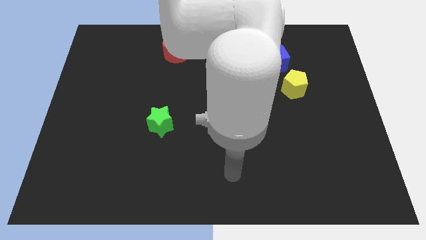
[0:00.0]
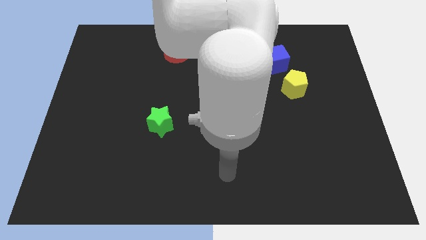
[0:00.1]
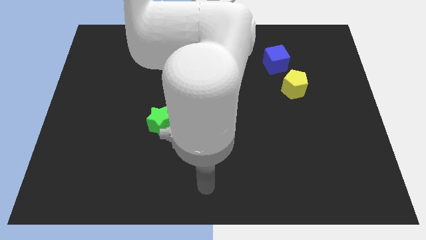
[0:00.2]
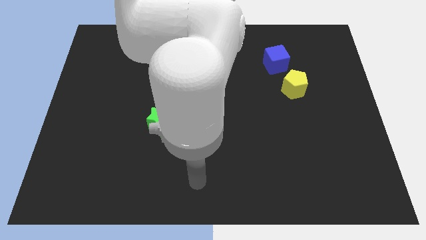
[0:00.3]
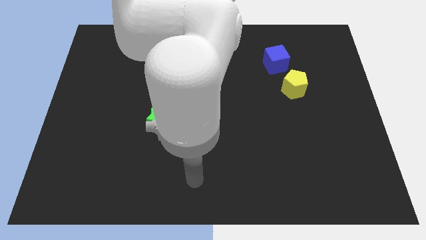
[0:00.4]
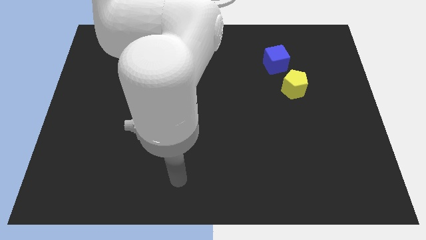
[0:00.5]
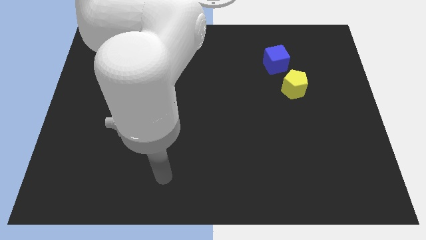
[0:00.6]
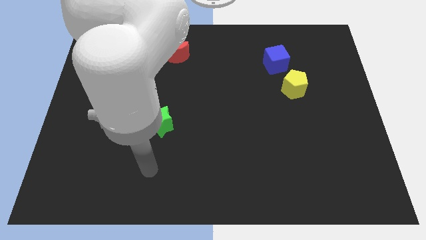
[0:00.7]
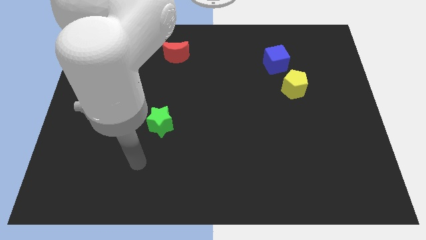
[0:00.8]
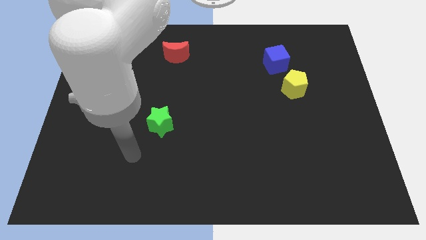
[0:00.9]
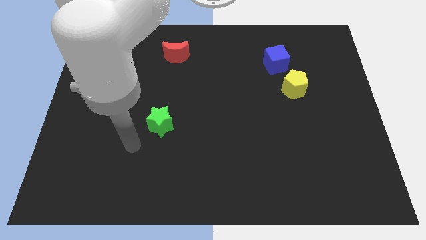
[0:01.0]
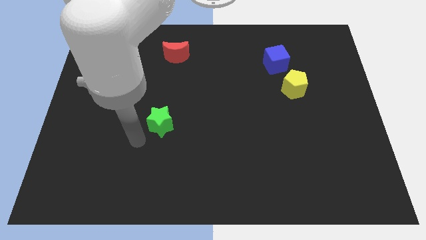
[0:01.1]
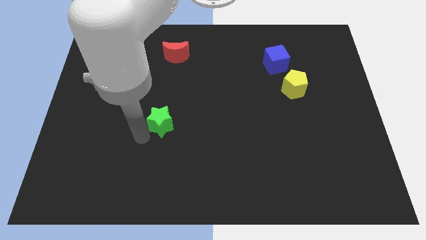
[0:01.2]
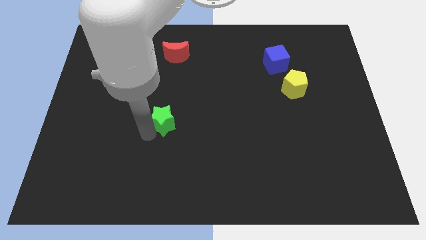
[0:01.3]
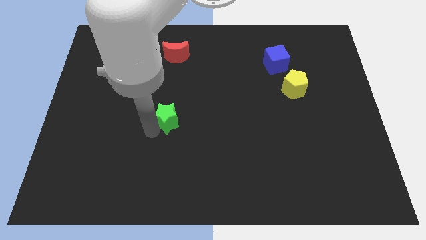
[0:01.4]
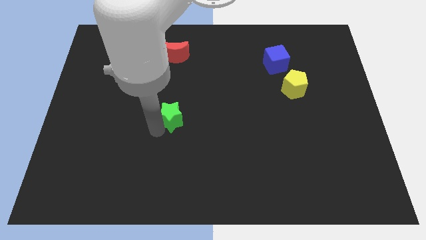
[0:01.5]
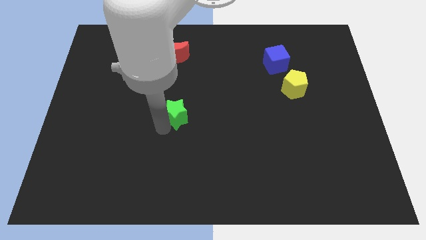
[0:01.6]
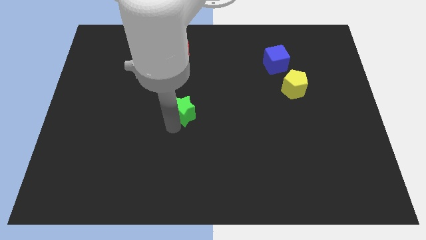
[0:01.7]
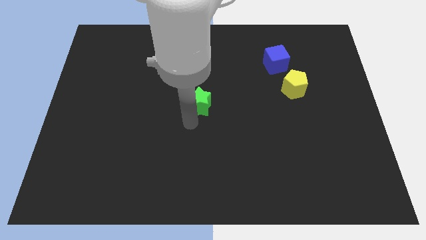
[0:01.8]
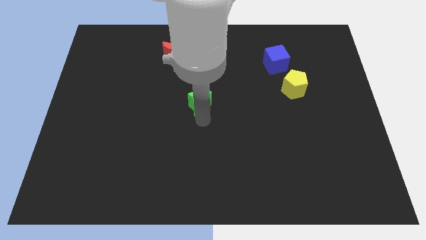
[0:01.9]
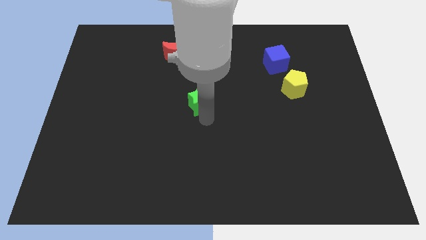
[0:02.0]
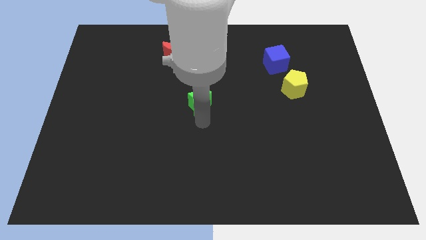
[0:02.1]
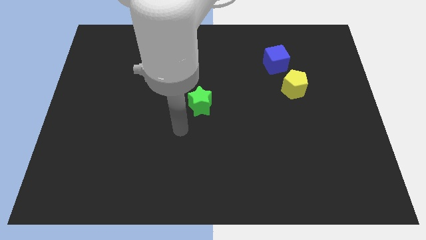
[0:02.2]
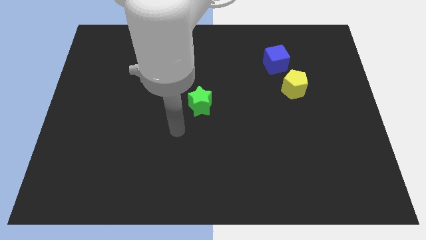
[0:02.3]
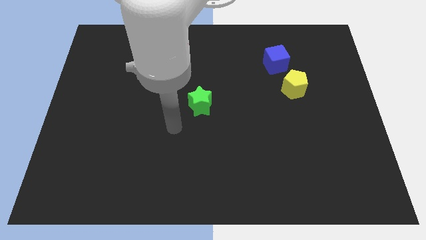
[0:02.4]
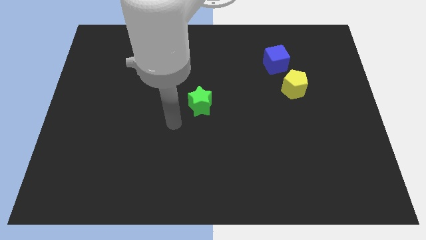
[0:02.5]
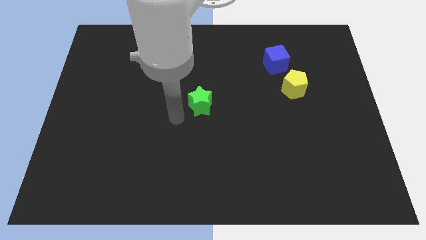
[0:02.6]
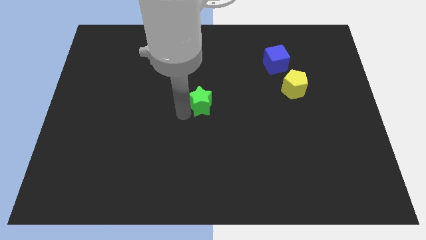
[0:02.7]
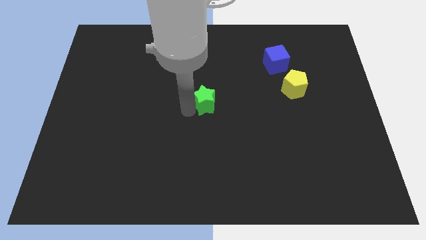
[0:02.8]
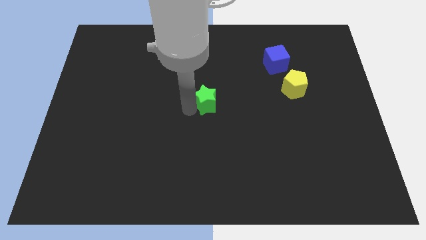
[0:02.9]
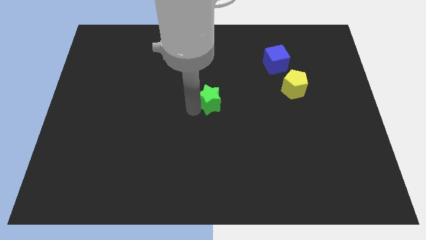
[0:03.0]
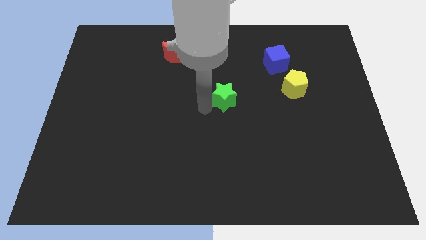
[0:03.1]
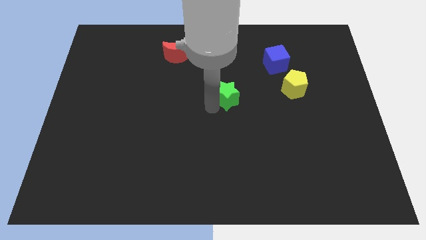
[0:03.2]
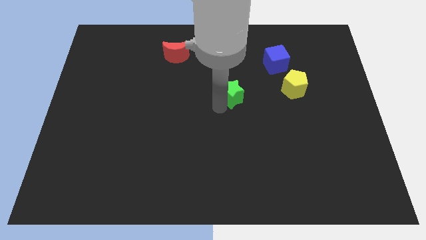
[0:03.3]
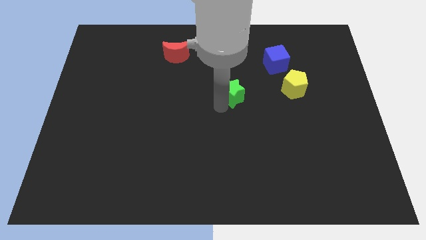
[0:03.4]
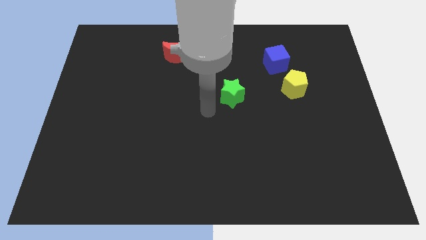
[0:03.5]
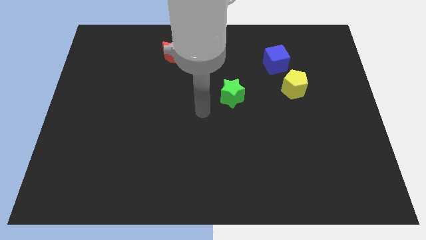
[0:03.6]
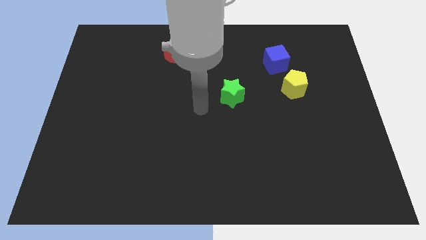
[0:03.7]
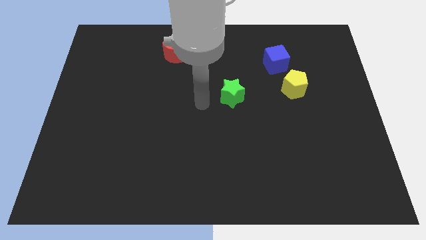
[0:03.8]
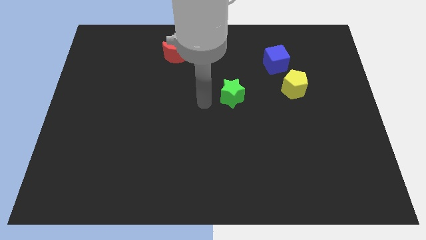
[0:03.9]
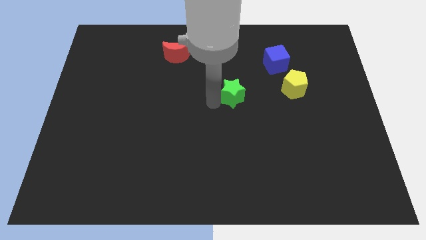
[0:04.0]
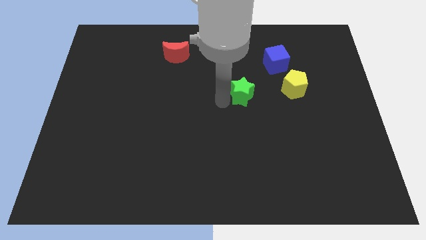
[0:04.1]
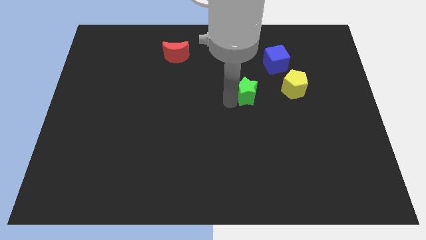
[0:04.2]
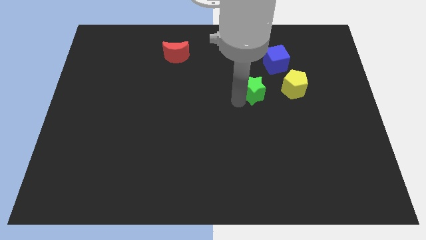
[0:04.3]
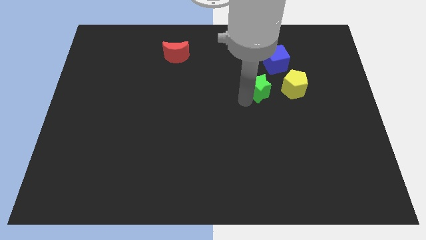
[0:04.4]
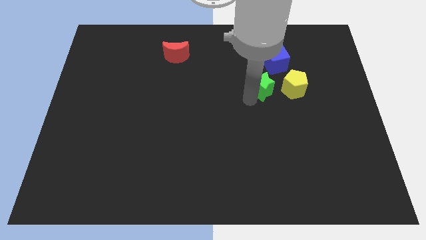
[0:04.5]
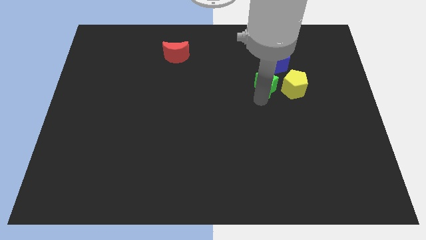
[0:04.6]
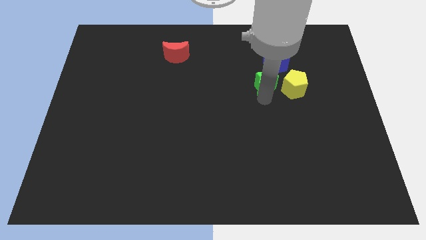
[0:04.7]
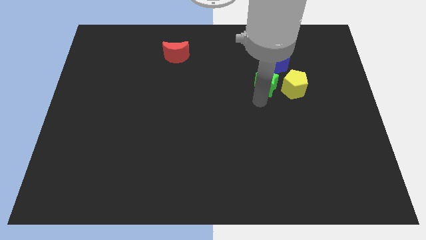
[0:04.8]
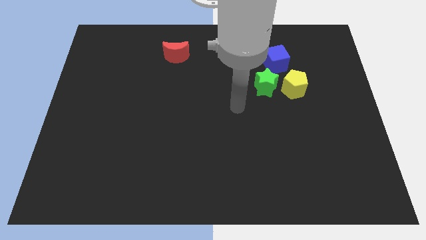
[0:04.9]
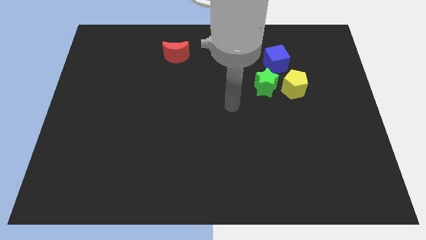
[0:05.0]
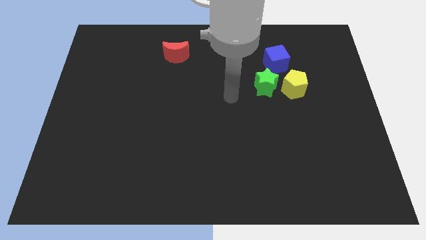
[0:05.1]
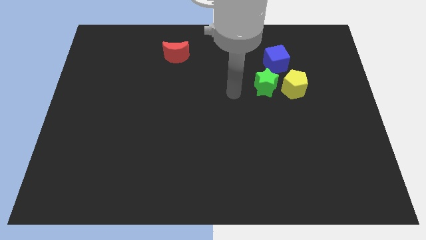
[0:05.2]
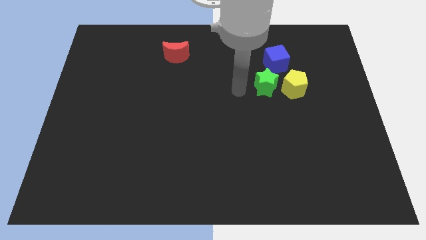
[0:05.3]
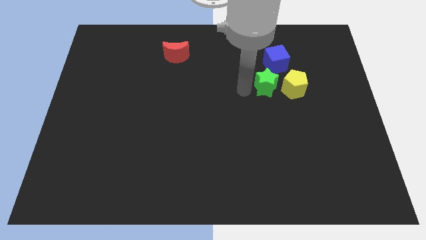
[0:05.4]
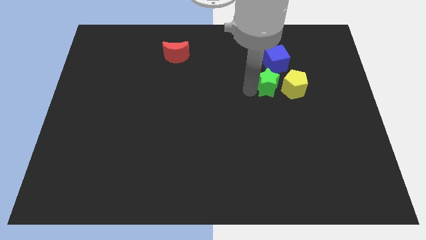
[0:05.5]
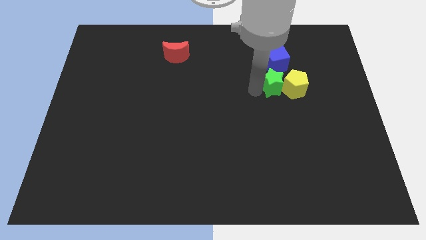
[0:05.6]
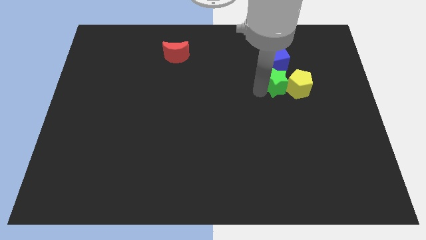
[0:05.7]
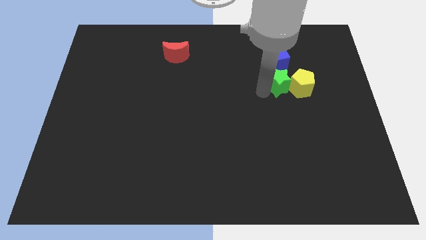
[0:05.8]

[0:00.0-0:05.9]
slide the green block to the yellow pentagon

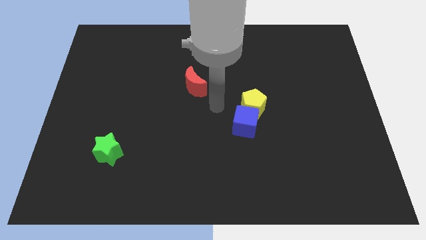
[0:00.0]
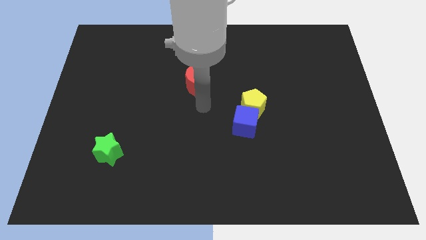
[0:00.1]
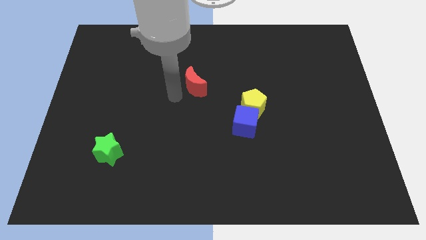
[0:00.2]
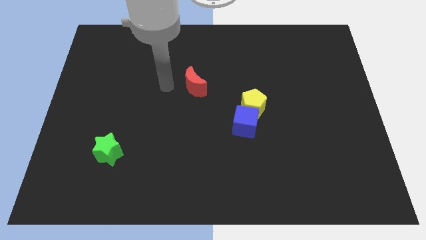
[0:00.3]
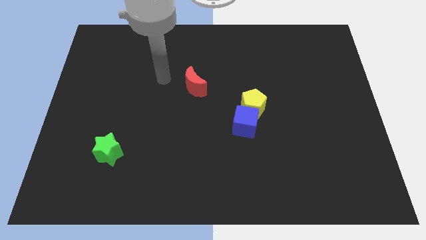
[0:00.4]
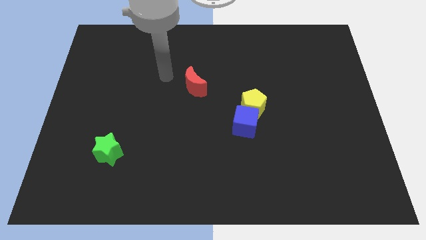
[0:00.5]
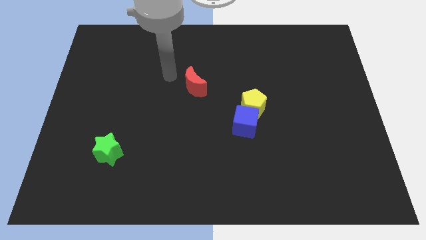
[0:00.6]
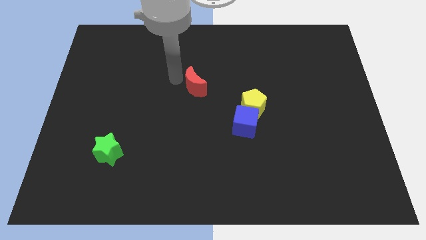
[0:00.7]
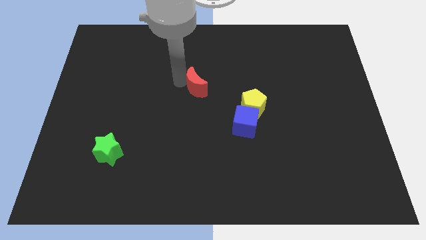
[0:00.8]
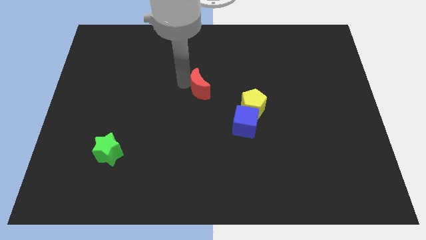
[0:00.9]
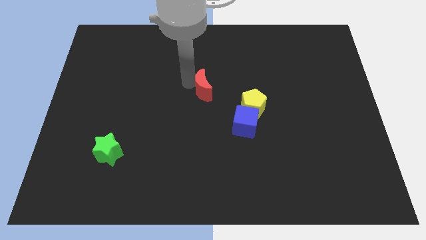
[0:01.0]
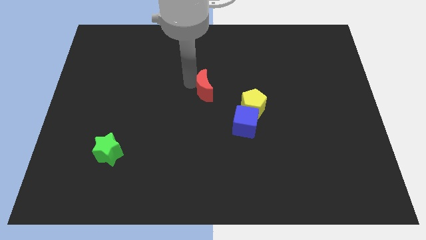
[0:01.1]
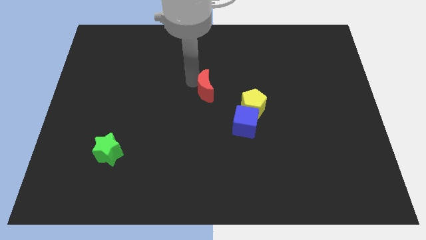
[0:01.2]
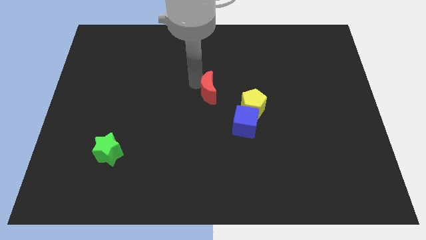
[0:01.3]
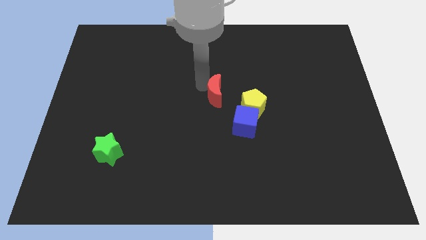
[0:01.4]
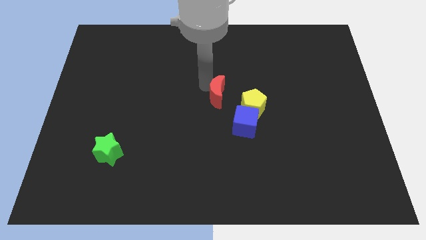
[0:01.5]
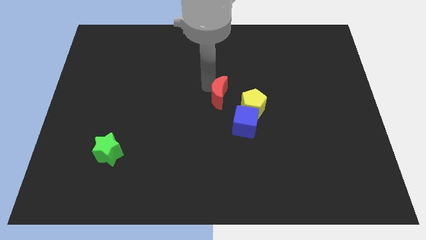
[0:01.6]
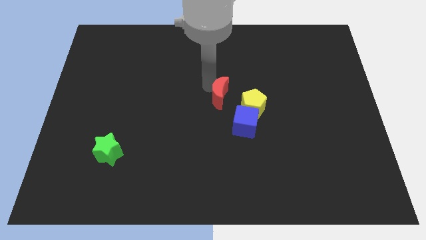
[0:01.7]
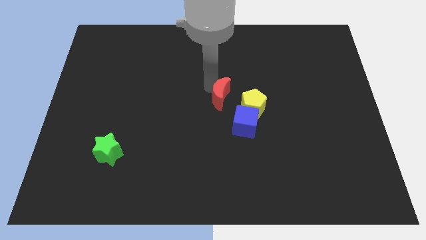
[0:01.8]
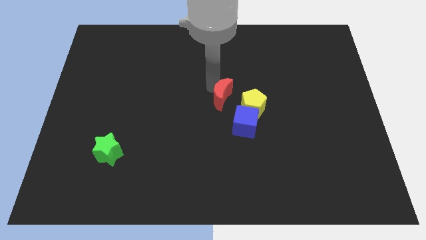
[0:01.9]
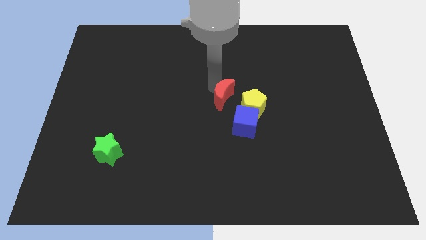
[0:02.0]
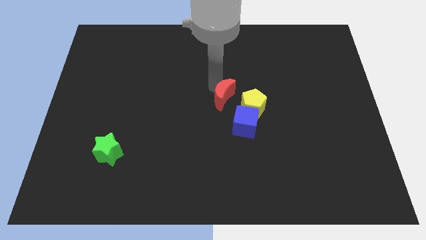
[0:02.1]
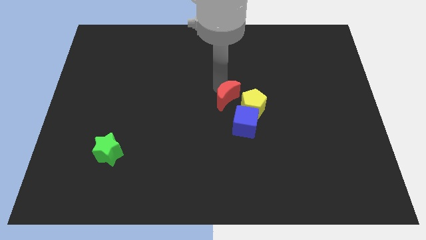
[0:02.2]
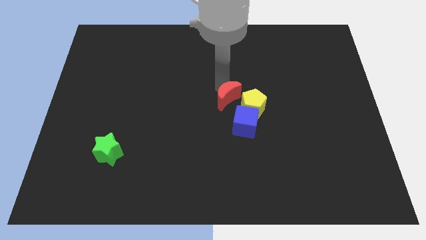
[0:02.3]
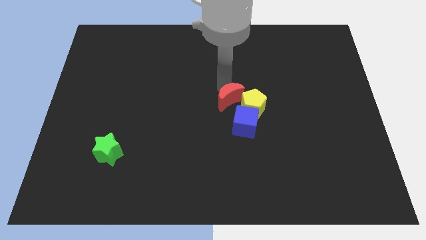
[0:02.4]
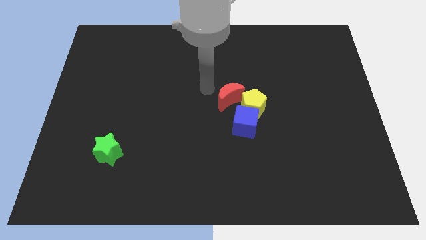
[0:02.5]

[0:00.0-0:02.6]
put the red moon towards the yellow pentagon
